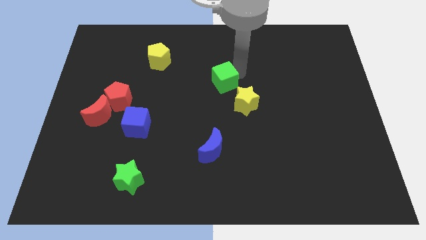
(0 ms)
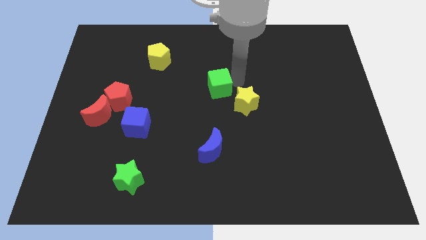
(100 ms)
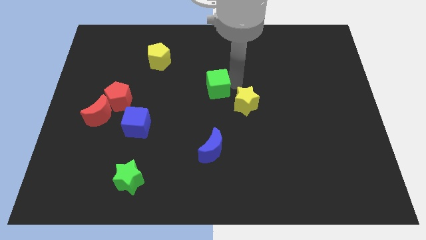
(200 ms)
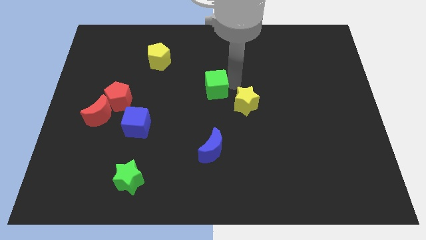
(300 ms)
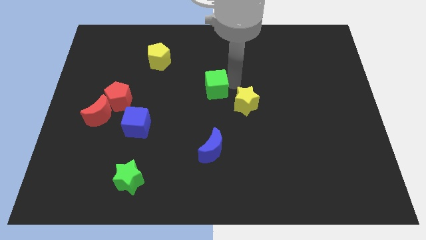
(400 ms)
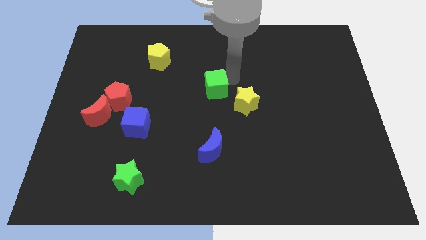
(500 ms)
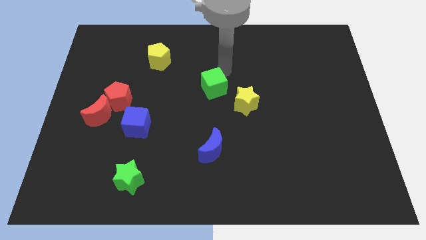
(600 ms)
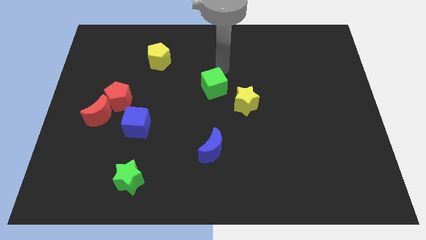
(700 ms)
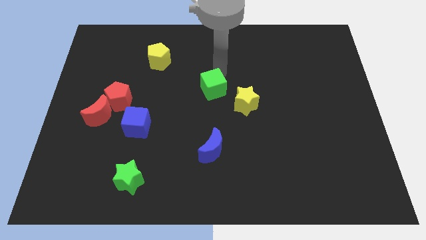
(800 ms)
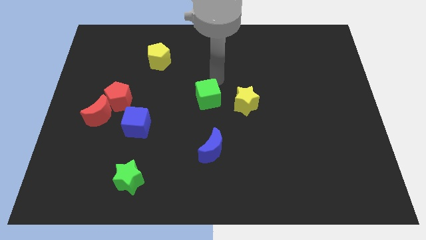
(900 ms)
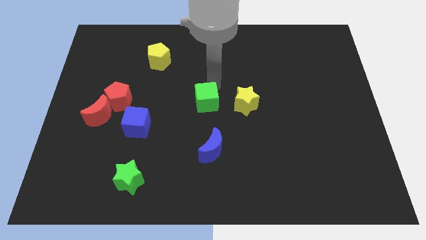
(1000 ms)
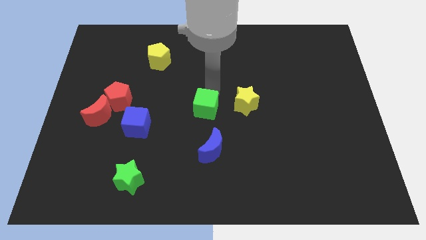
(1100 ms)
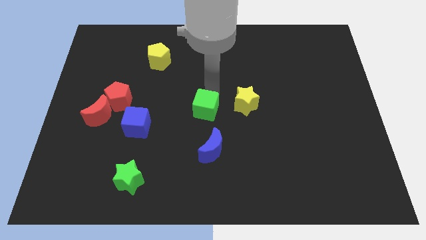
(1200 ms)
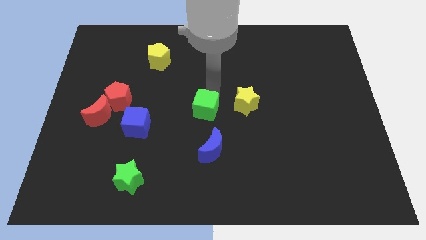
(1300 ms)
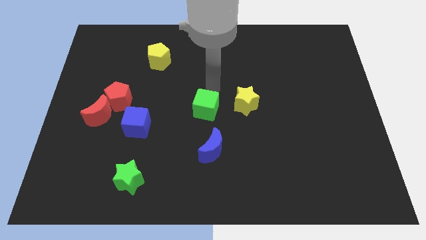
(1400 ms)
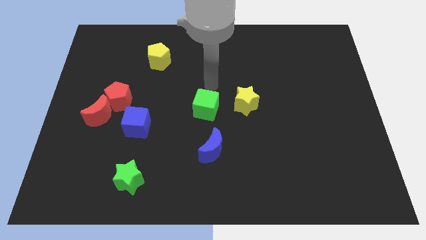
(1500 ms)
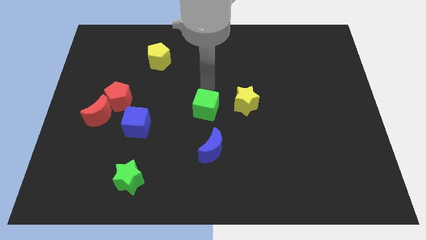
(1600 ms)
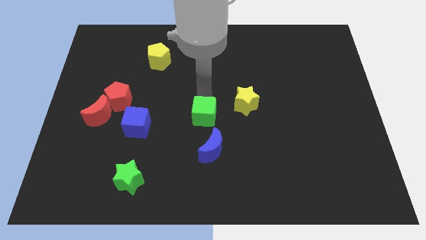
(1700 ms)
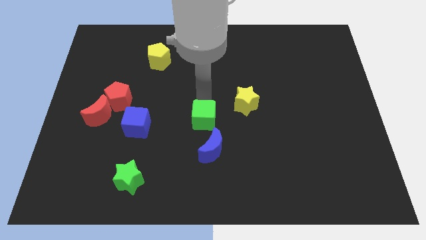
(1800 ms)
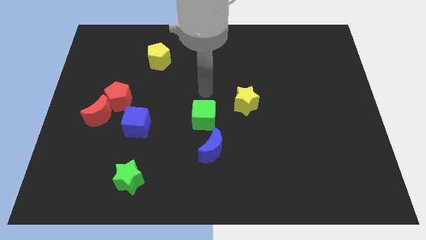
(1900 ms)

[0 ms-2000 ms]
place the green cube towards the center of the board

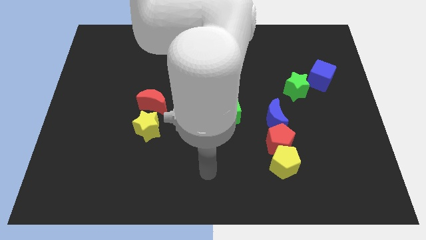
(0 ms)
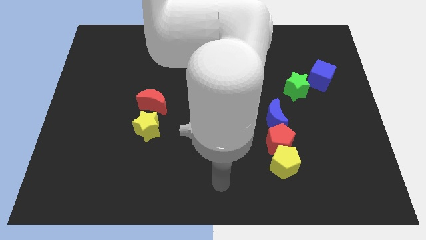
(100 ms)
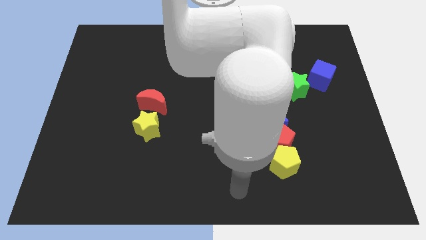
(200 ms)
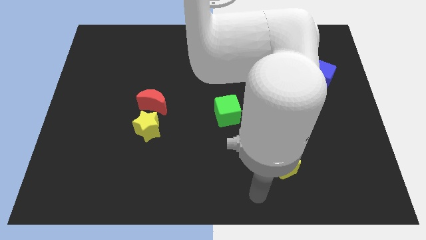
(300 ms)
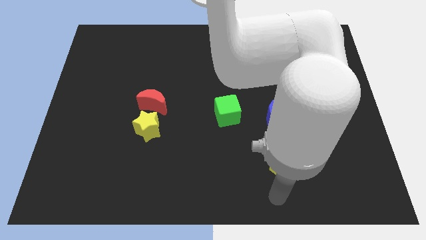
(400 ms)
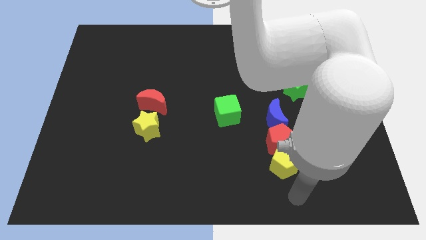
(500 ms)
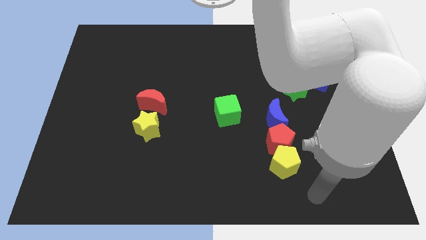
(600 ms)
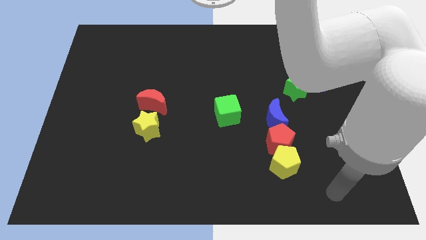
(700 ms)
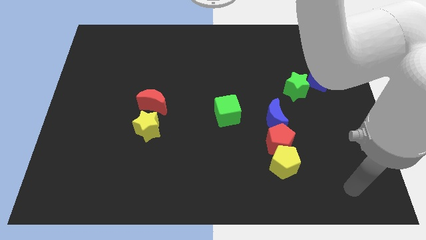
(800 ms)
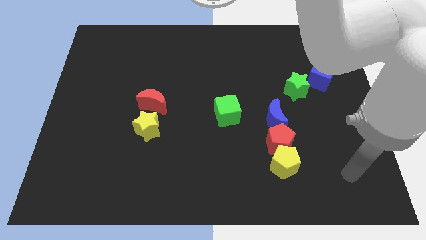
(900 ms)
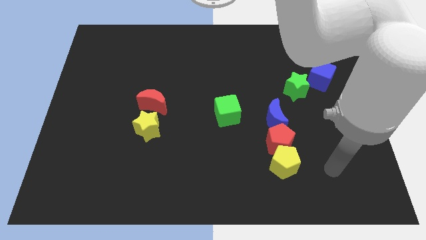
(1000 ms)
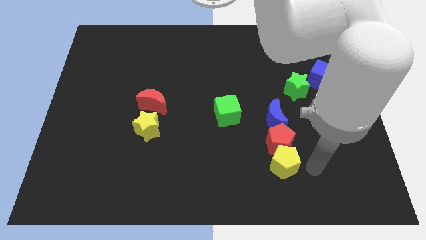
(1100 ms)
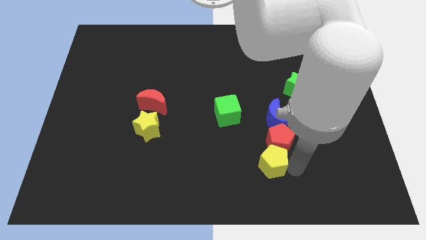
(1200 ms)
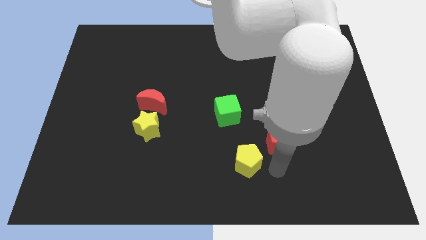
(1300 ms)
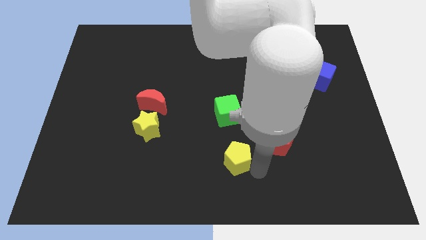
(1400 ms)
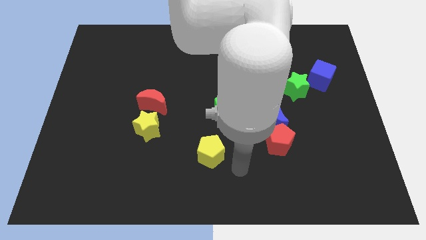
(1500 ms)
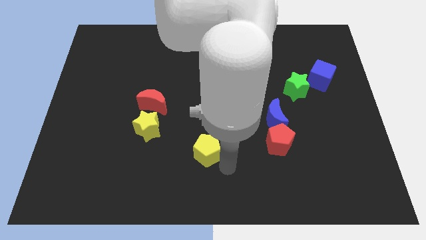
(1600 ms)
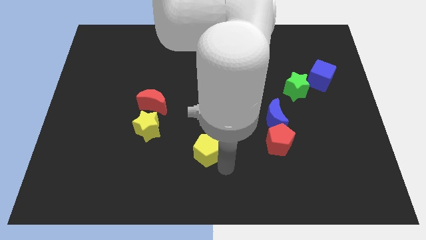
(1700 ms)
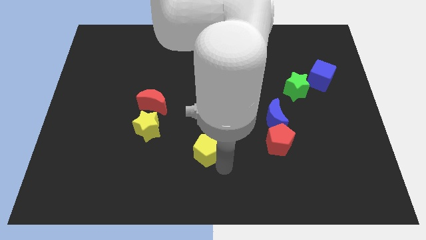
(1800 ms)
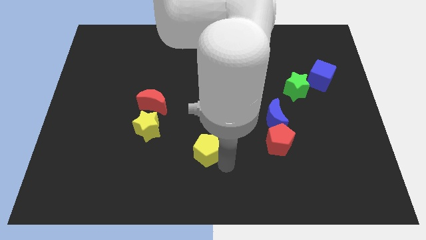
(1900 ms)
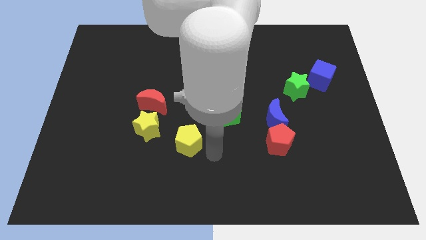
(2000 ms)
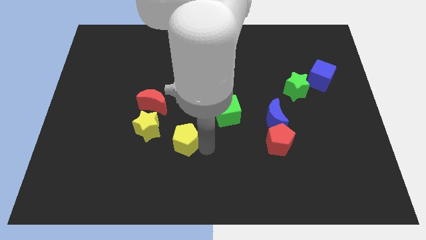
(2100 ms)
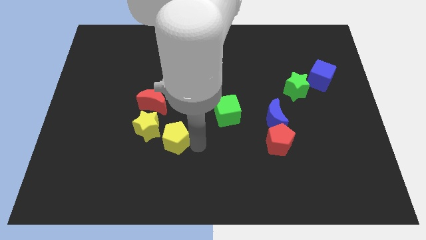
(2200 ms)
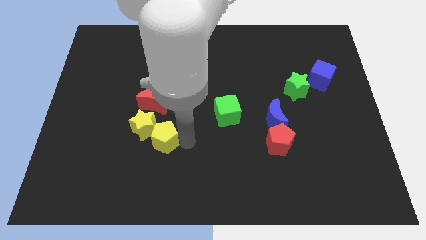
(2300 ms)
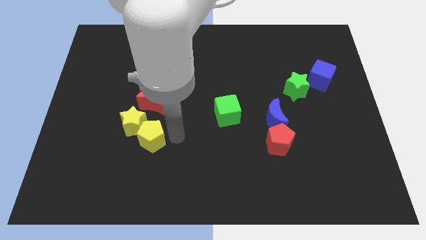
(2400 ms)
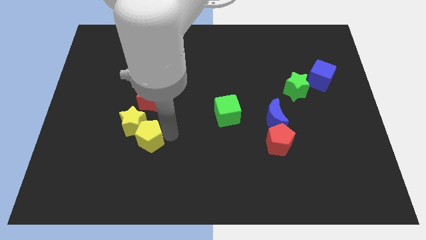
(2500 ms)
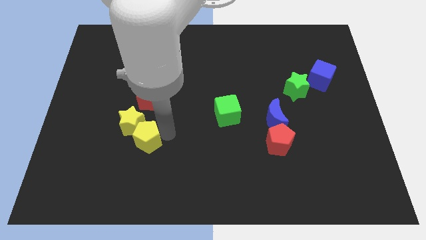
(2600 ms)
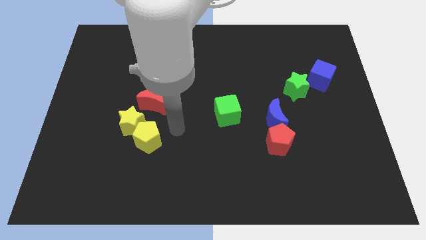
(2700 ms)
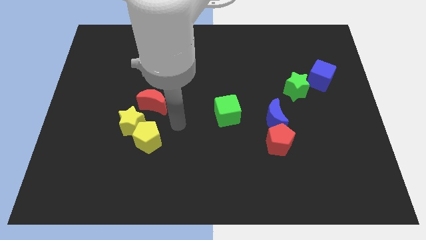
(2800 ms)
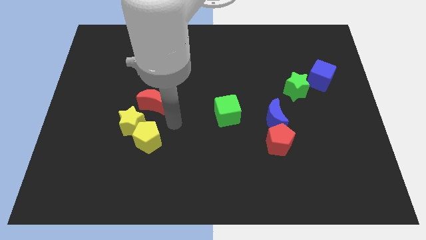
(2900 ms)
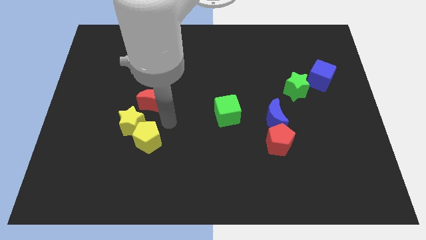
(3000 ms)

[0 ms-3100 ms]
move the yellow pentagon into the bottom right side of the yellow star

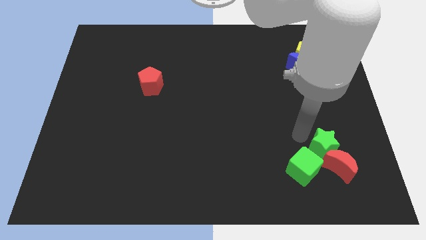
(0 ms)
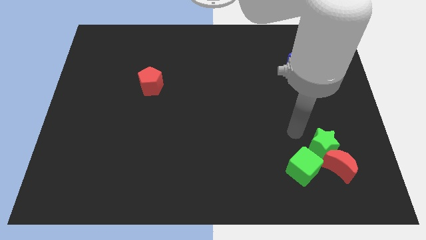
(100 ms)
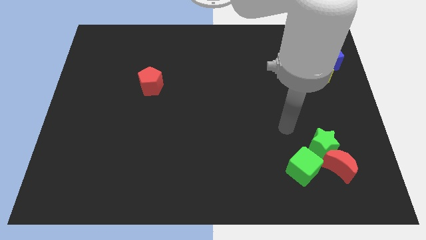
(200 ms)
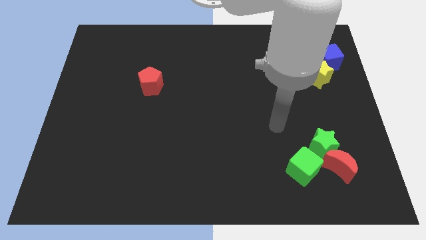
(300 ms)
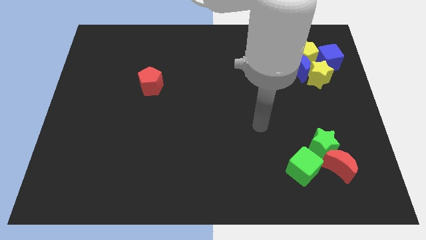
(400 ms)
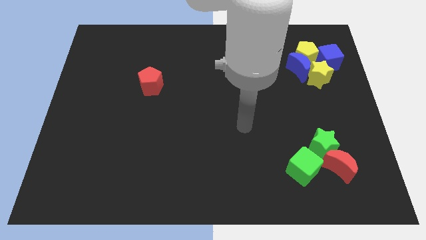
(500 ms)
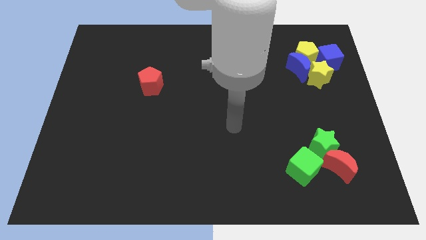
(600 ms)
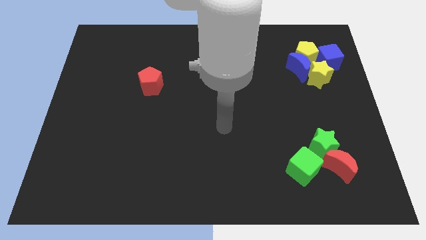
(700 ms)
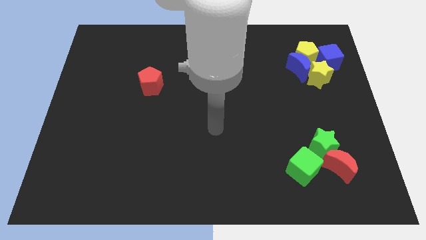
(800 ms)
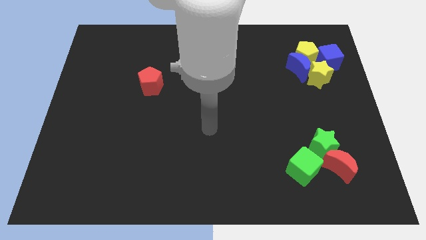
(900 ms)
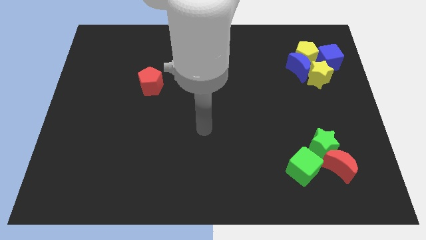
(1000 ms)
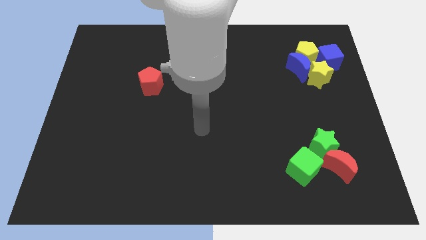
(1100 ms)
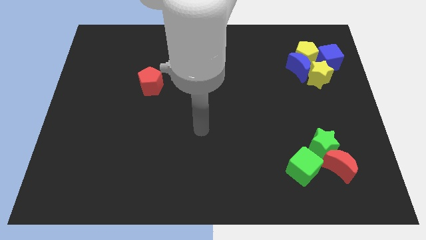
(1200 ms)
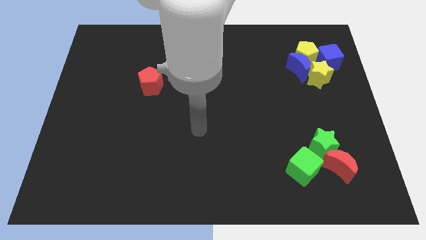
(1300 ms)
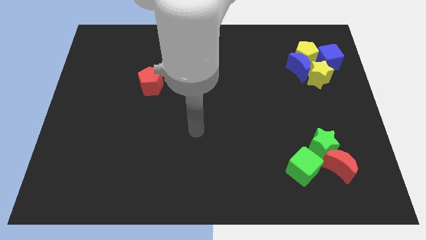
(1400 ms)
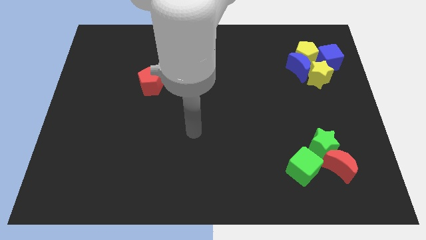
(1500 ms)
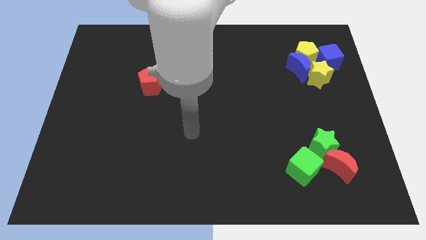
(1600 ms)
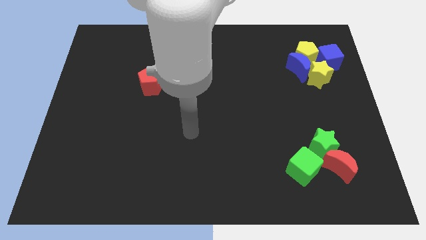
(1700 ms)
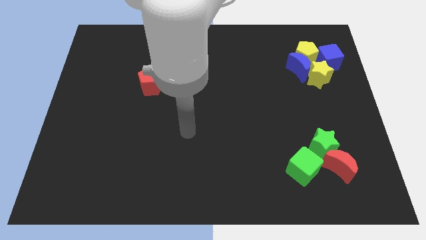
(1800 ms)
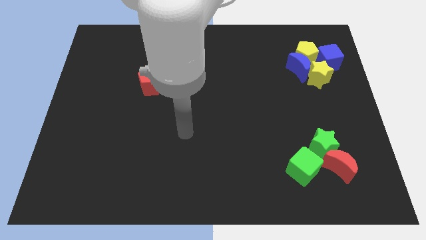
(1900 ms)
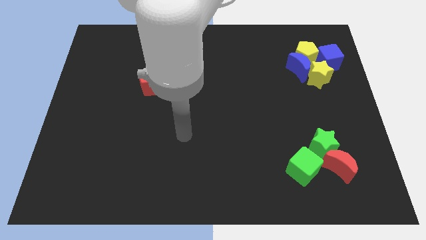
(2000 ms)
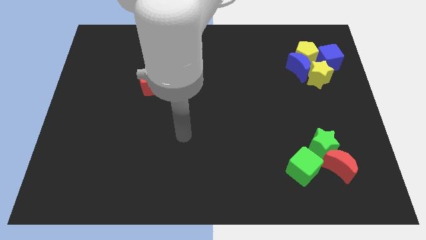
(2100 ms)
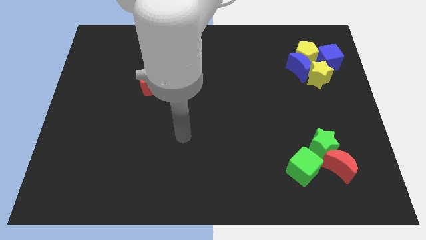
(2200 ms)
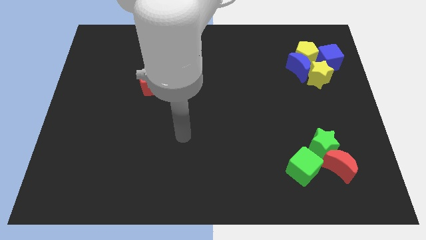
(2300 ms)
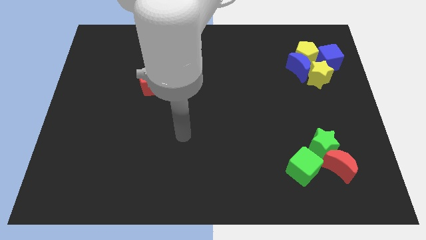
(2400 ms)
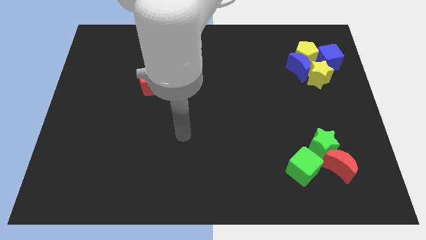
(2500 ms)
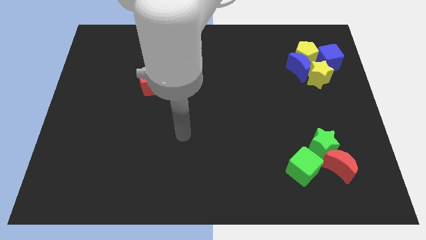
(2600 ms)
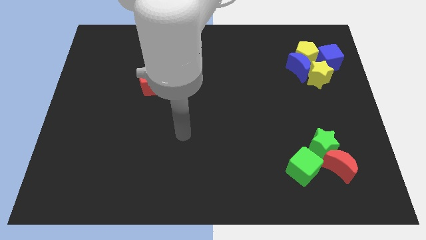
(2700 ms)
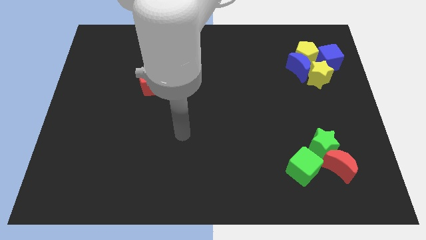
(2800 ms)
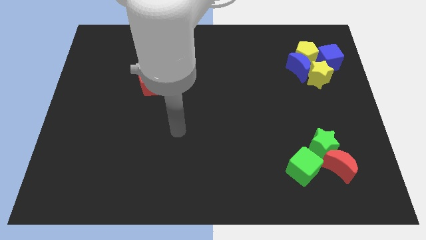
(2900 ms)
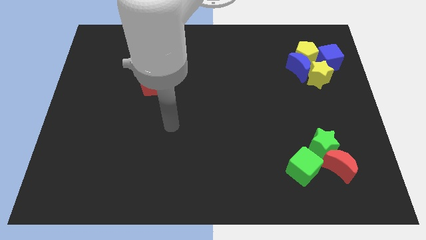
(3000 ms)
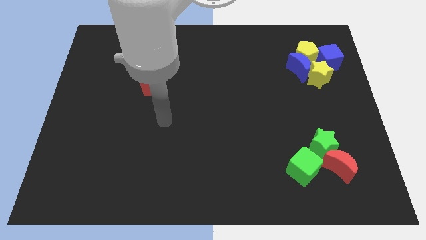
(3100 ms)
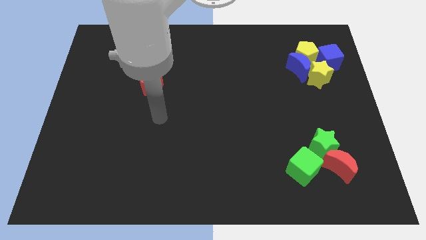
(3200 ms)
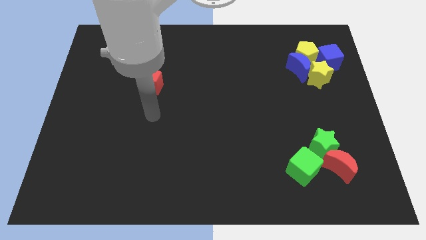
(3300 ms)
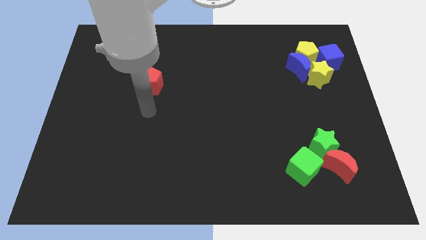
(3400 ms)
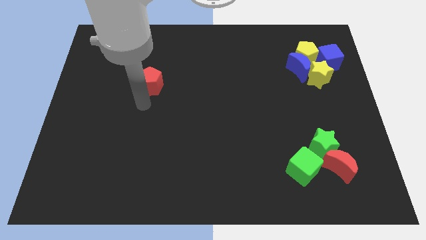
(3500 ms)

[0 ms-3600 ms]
move your arm at the bottom of the red pentagon

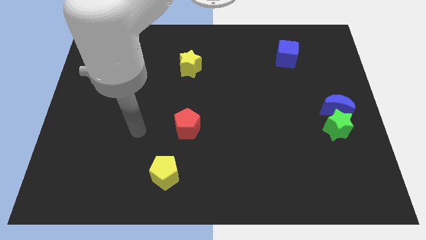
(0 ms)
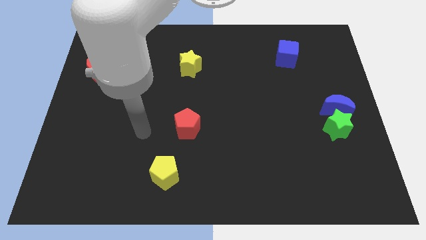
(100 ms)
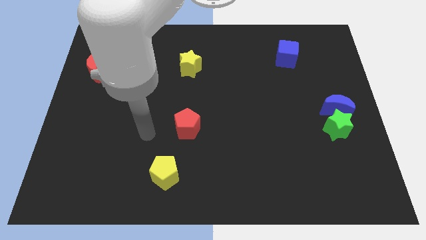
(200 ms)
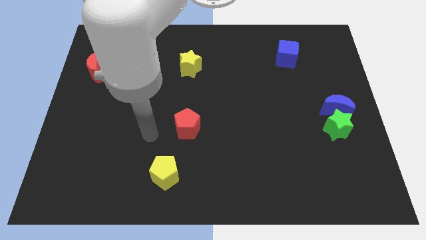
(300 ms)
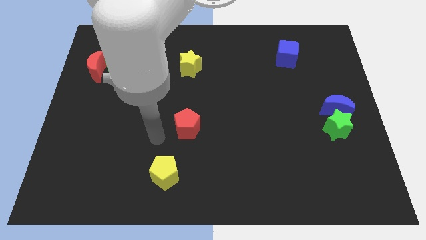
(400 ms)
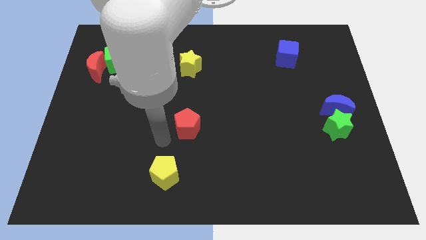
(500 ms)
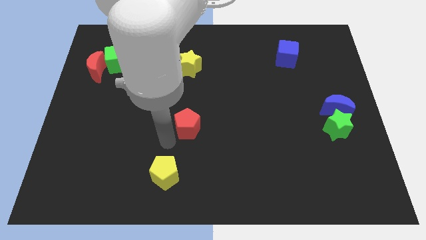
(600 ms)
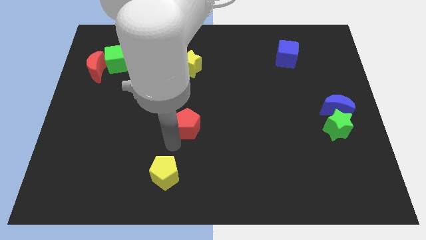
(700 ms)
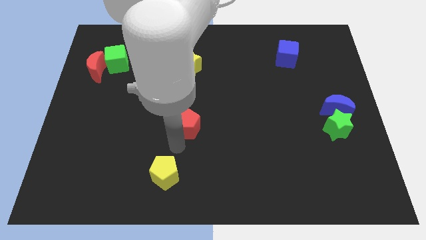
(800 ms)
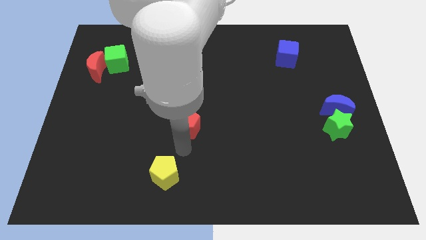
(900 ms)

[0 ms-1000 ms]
move the arm towards the bottom of the red pentagon
